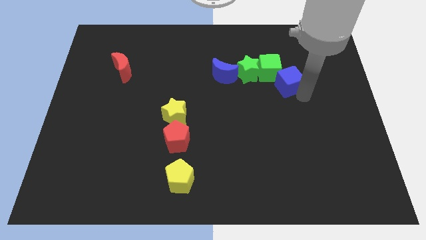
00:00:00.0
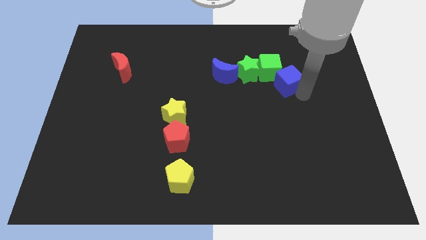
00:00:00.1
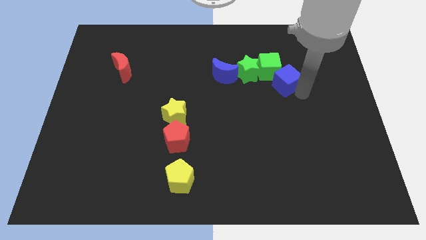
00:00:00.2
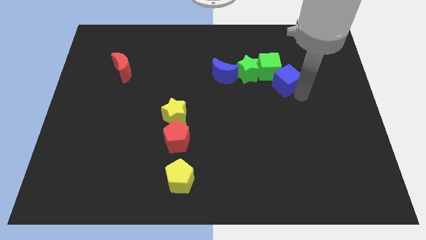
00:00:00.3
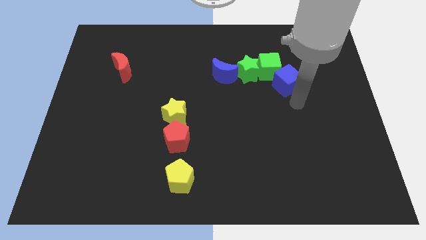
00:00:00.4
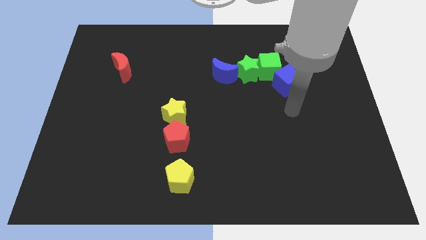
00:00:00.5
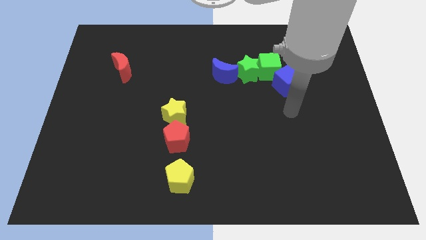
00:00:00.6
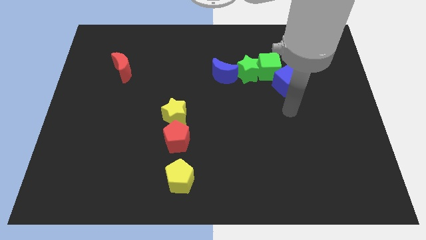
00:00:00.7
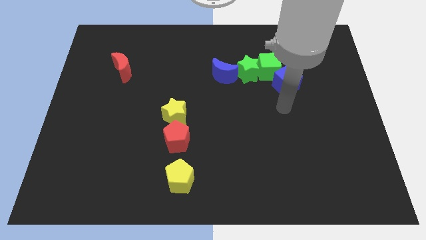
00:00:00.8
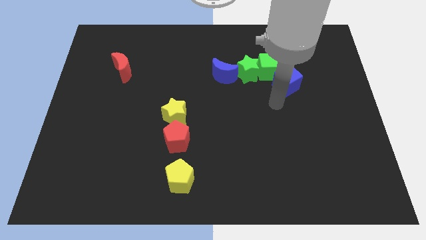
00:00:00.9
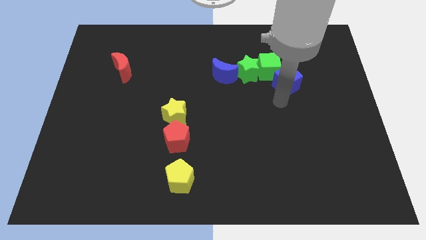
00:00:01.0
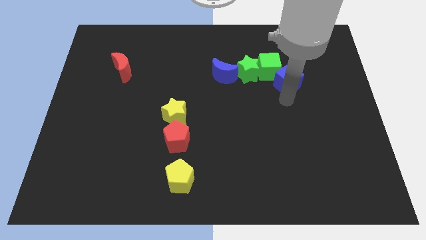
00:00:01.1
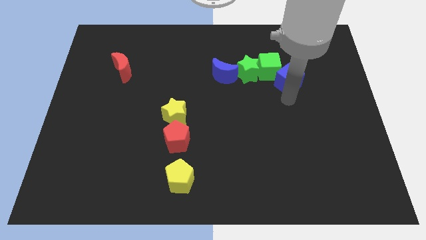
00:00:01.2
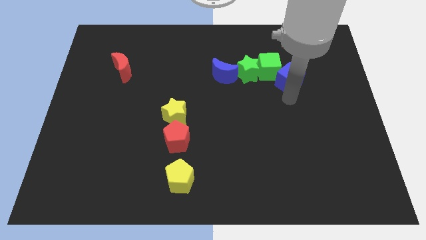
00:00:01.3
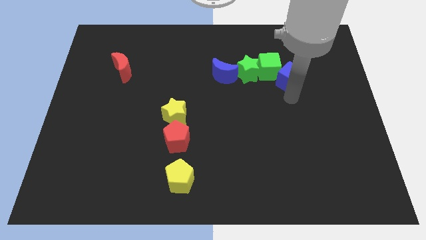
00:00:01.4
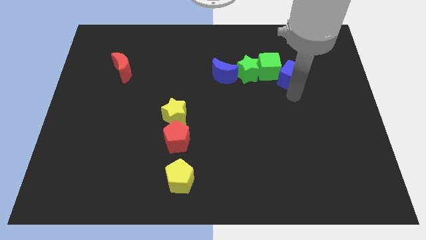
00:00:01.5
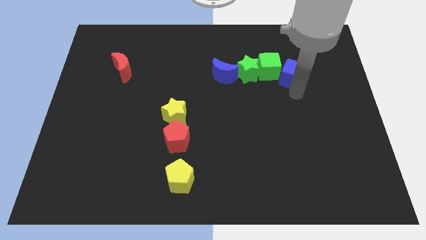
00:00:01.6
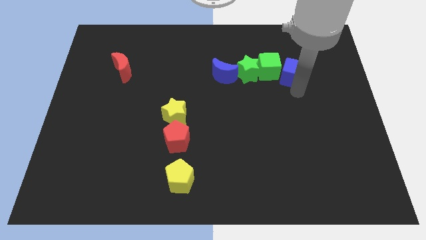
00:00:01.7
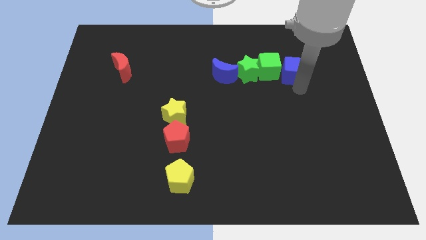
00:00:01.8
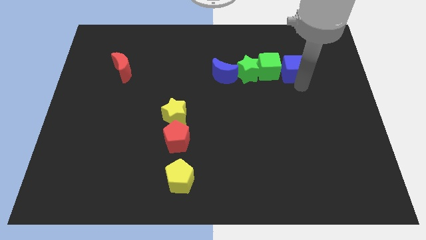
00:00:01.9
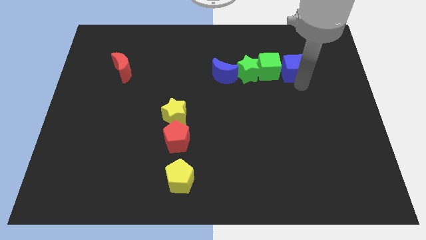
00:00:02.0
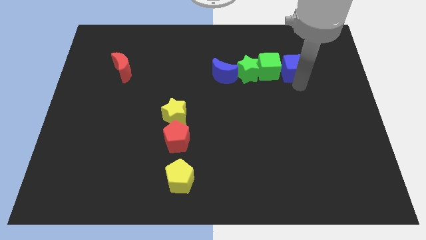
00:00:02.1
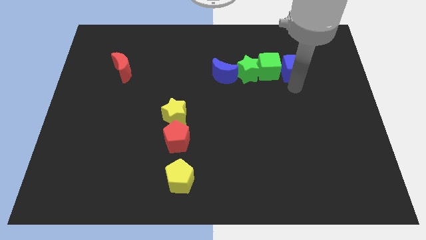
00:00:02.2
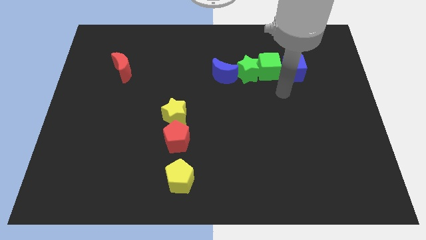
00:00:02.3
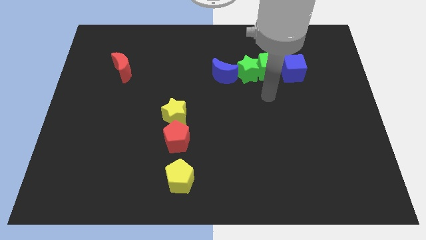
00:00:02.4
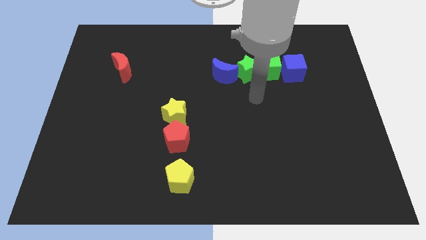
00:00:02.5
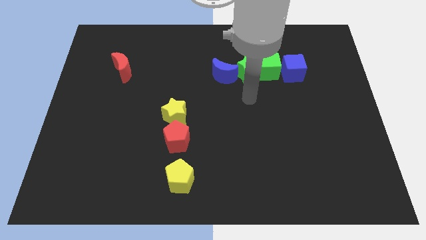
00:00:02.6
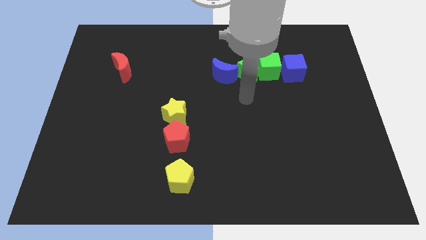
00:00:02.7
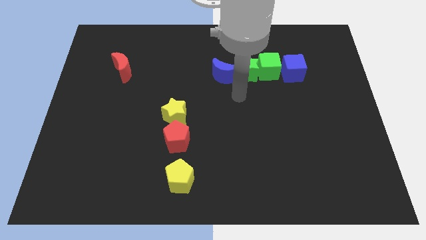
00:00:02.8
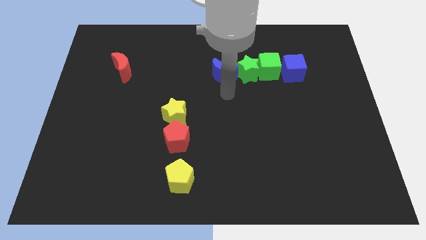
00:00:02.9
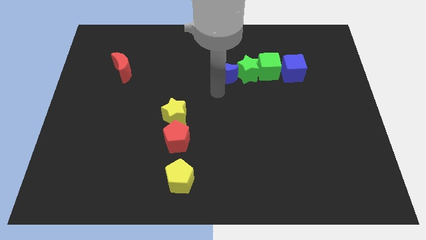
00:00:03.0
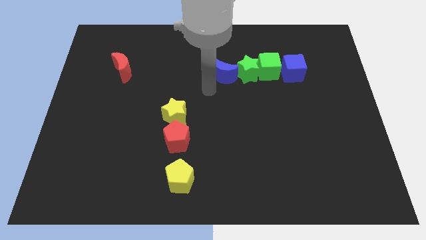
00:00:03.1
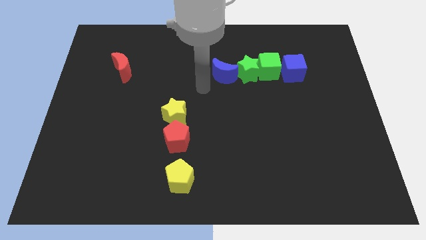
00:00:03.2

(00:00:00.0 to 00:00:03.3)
place blue cube on right to green cube

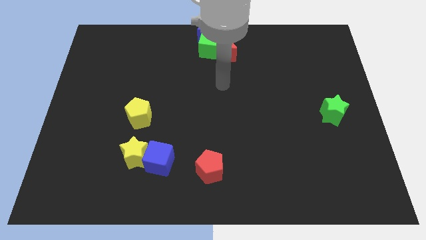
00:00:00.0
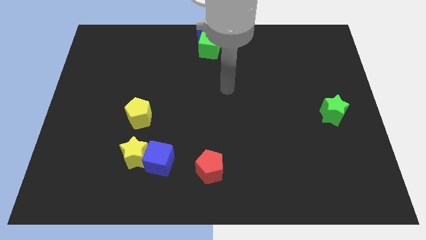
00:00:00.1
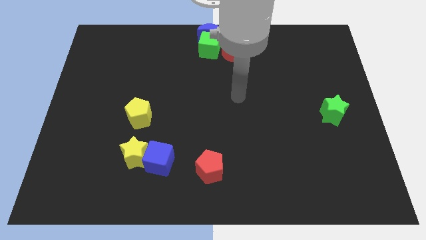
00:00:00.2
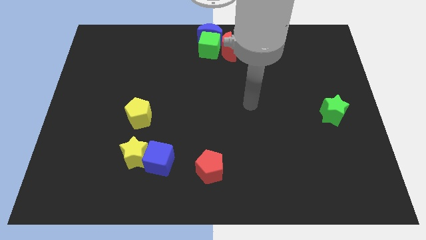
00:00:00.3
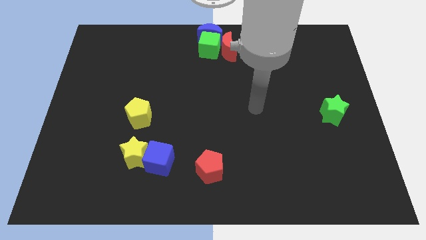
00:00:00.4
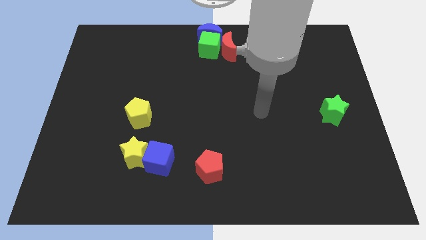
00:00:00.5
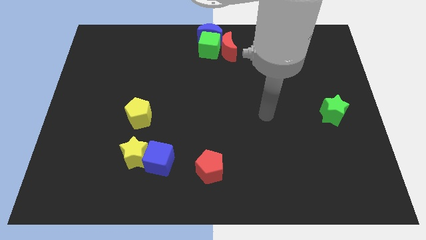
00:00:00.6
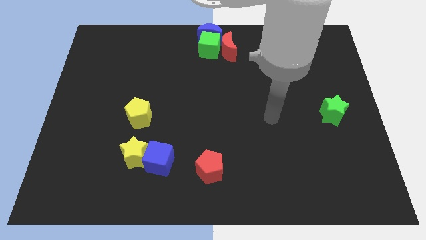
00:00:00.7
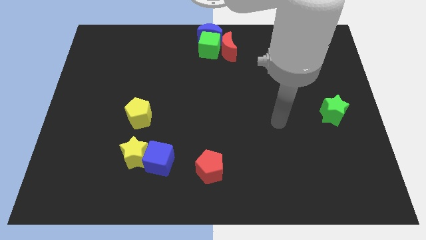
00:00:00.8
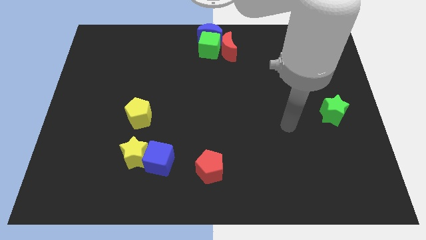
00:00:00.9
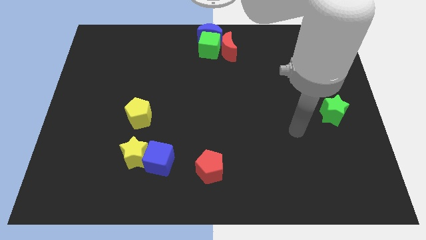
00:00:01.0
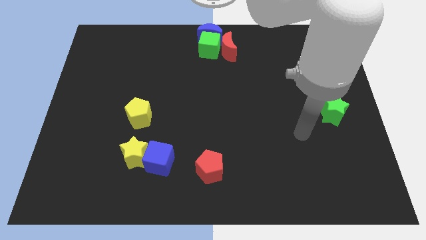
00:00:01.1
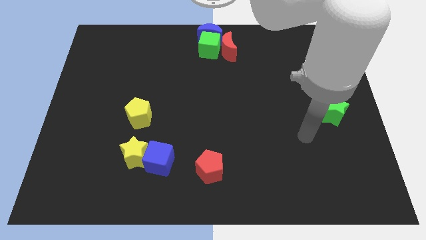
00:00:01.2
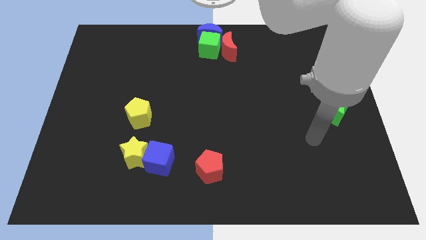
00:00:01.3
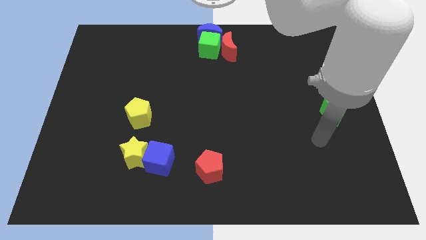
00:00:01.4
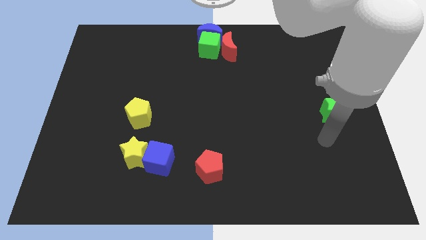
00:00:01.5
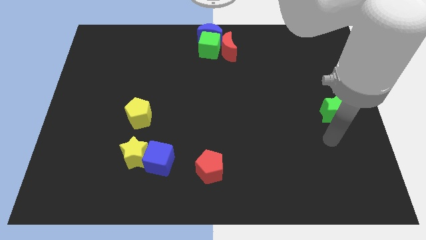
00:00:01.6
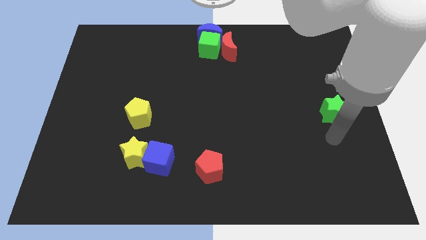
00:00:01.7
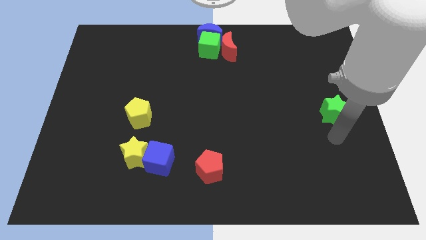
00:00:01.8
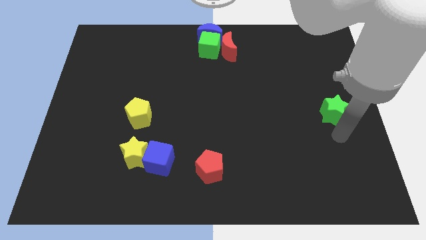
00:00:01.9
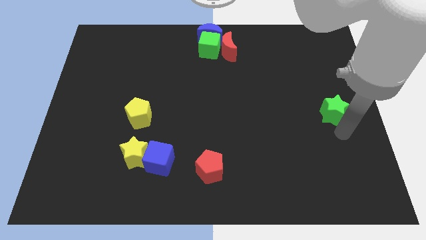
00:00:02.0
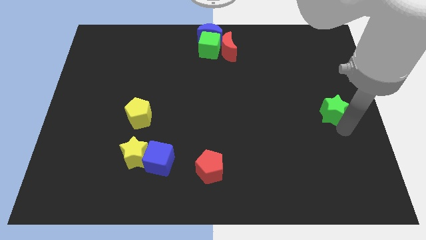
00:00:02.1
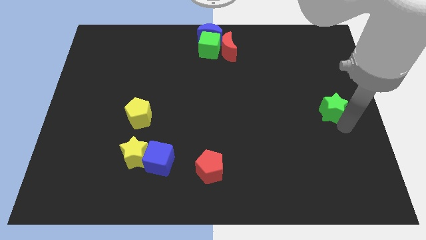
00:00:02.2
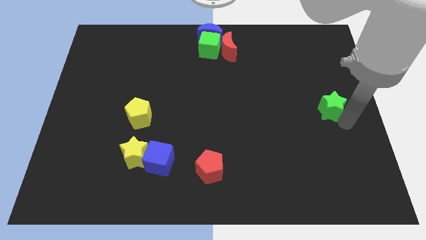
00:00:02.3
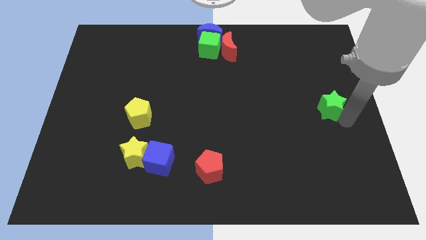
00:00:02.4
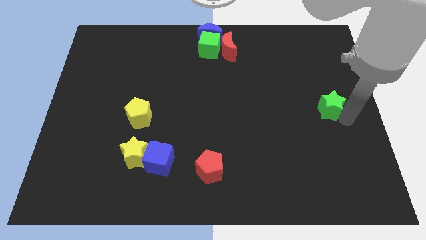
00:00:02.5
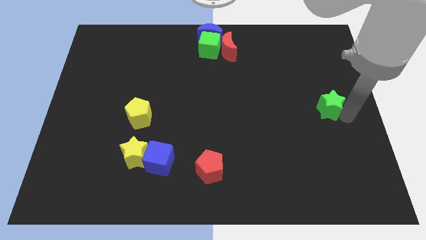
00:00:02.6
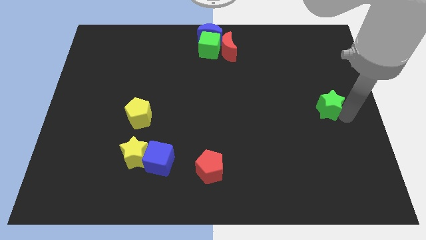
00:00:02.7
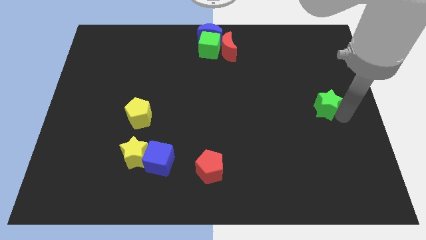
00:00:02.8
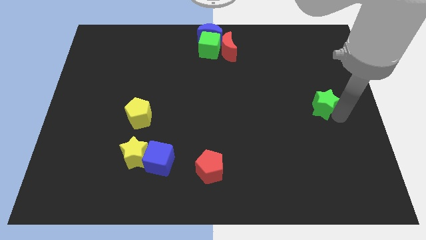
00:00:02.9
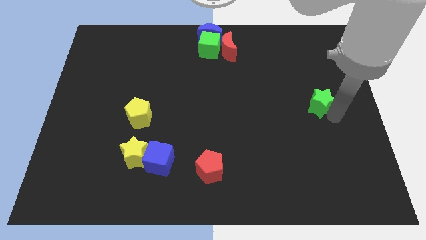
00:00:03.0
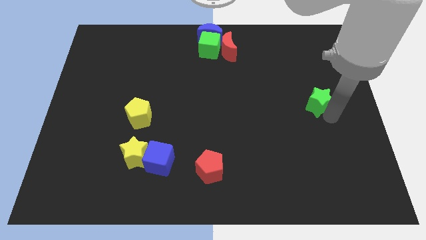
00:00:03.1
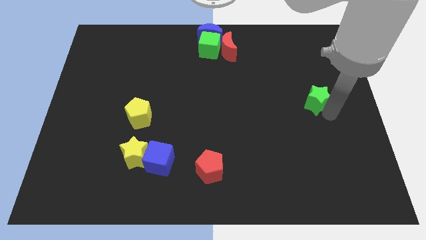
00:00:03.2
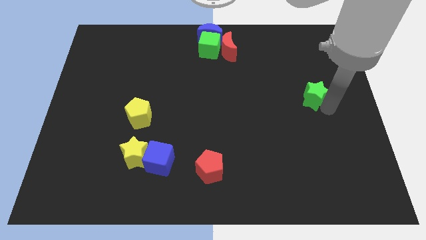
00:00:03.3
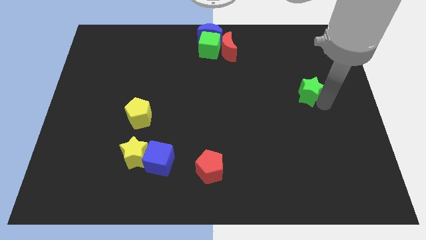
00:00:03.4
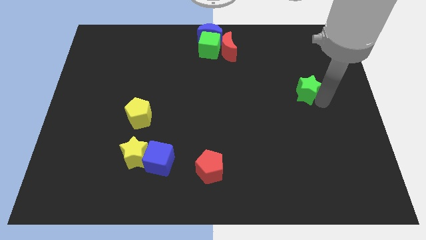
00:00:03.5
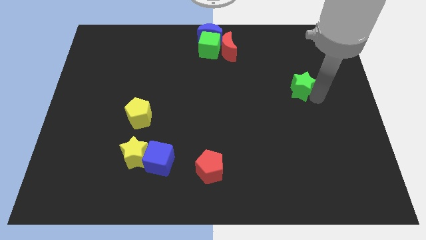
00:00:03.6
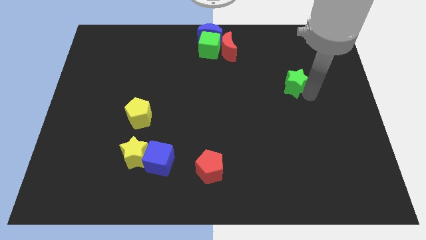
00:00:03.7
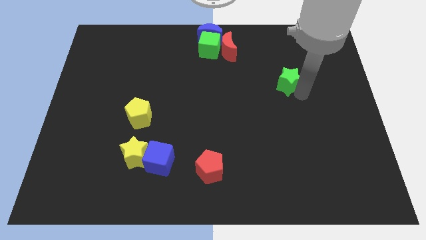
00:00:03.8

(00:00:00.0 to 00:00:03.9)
slide the green star towards the top of the board

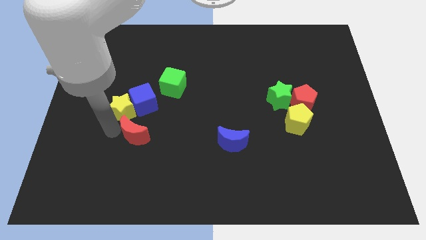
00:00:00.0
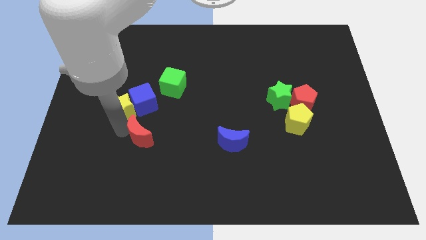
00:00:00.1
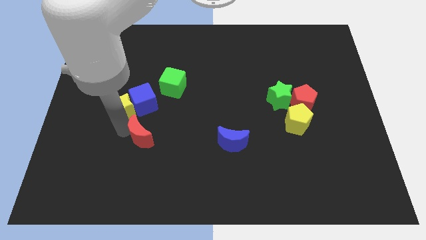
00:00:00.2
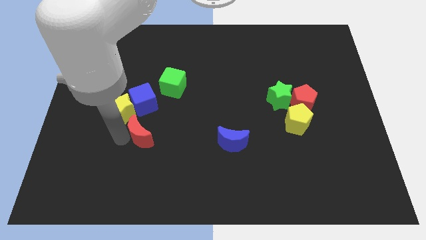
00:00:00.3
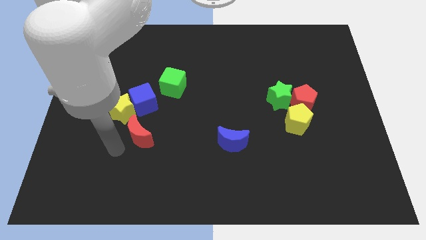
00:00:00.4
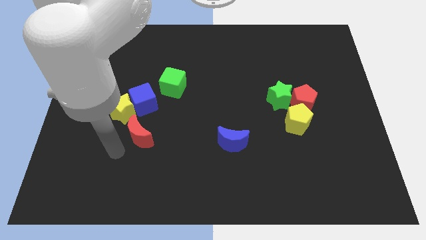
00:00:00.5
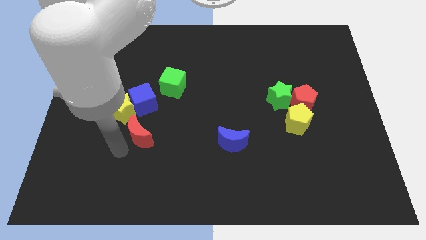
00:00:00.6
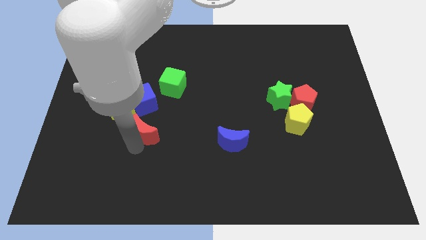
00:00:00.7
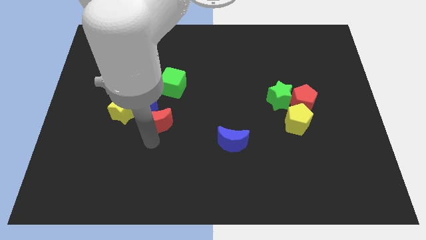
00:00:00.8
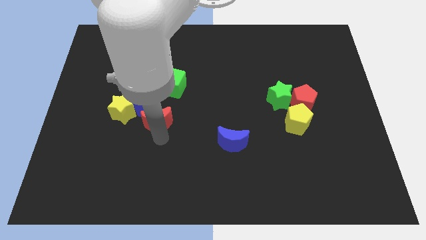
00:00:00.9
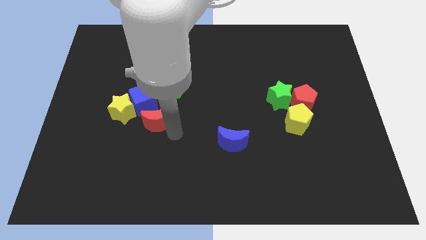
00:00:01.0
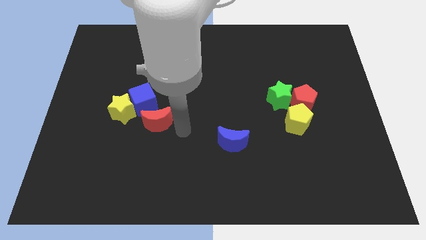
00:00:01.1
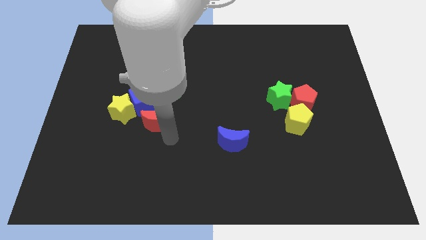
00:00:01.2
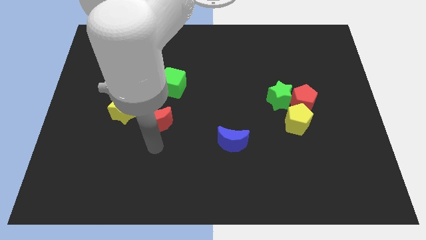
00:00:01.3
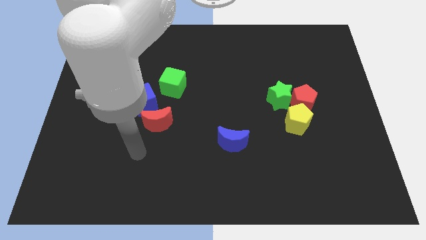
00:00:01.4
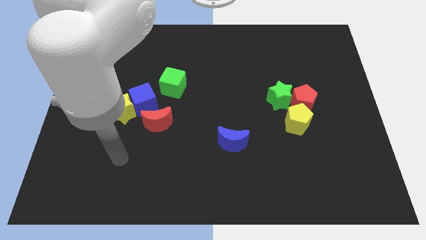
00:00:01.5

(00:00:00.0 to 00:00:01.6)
slide the red moon towards the bottom of blue cube
